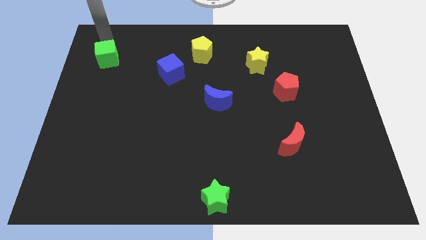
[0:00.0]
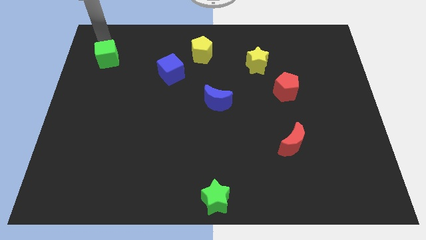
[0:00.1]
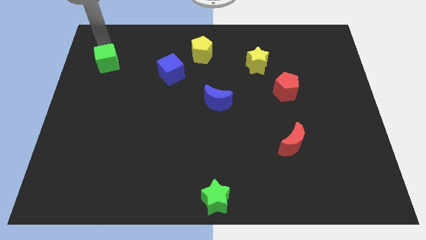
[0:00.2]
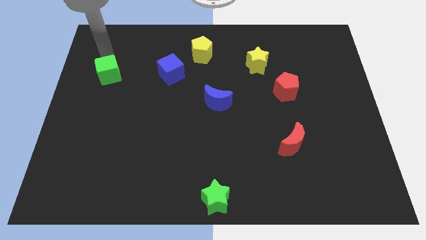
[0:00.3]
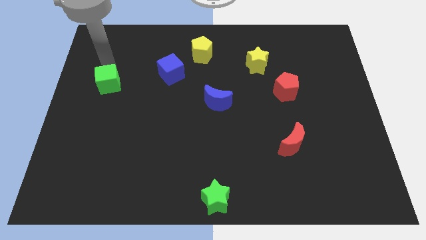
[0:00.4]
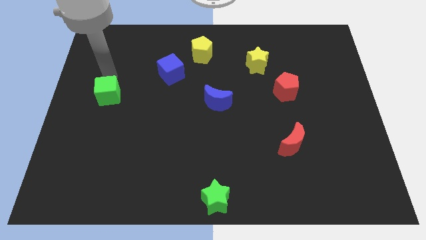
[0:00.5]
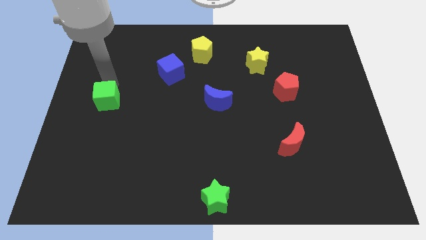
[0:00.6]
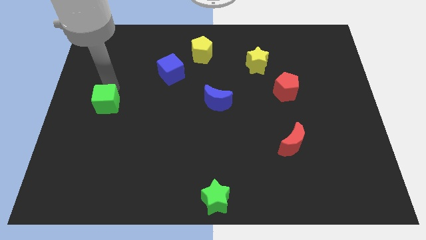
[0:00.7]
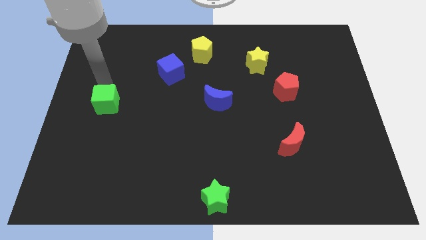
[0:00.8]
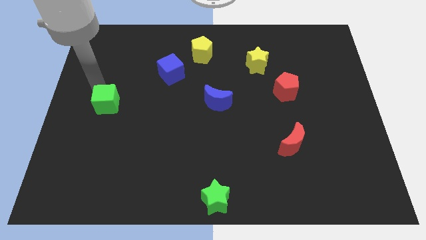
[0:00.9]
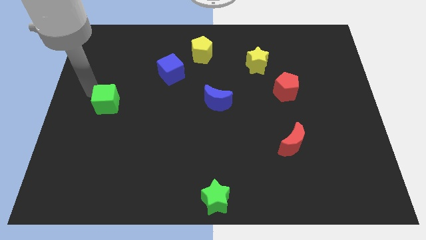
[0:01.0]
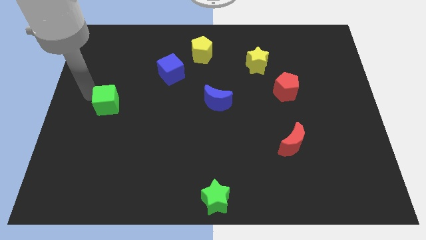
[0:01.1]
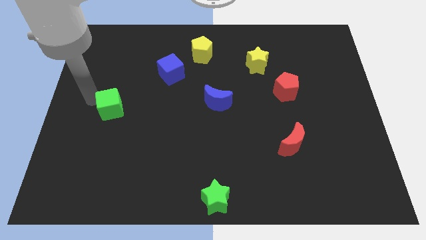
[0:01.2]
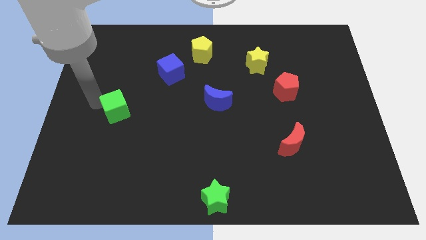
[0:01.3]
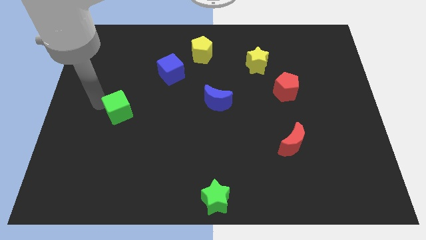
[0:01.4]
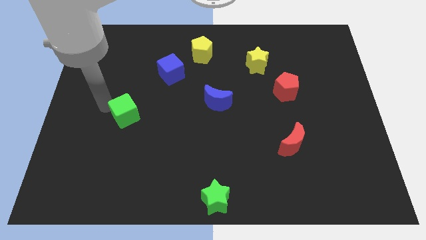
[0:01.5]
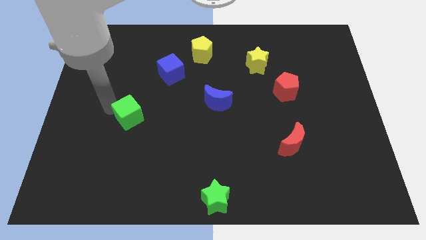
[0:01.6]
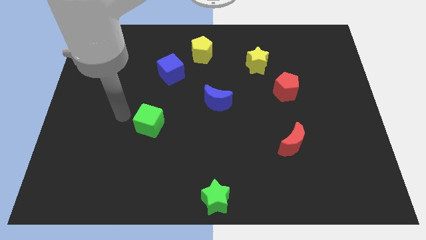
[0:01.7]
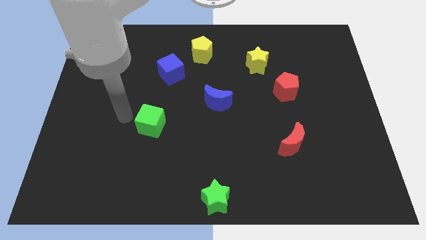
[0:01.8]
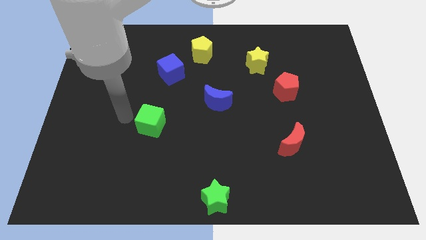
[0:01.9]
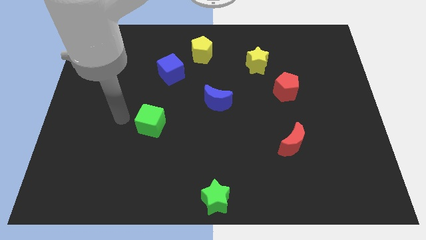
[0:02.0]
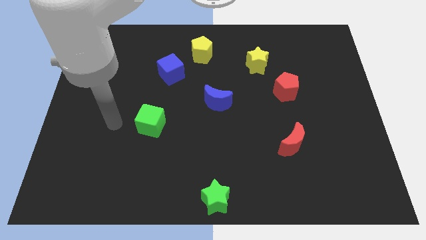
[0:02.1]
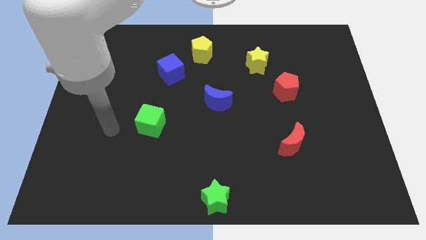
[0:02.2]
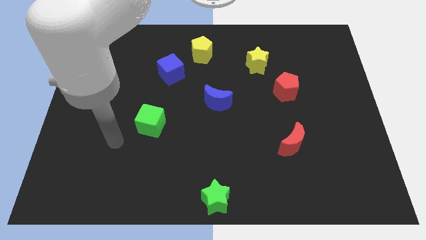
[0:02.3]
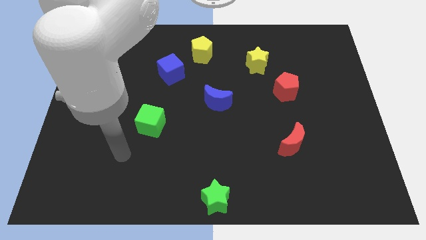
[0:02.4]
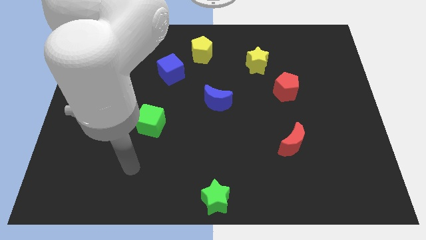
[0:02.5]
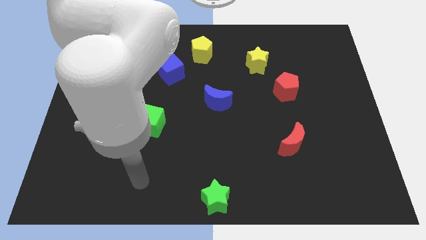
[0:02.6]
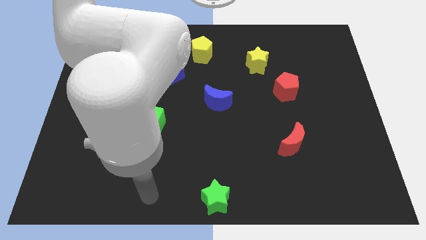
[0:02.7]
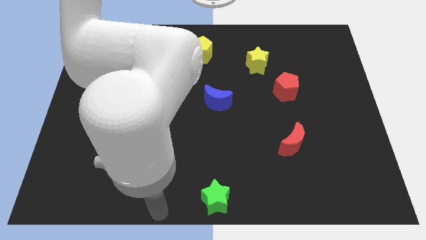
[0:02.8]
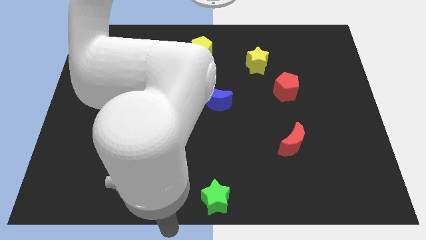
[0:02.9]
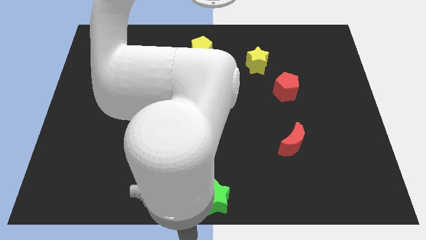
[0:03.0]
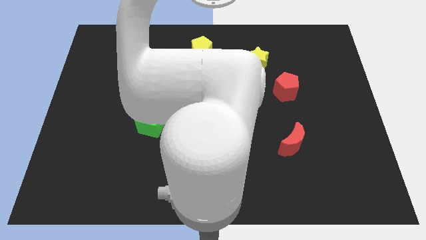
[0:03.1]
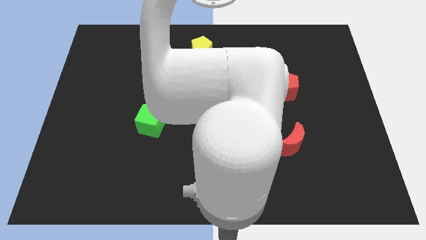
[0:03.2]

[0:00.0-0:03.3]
place the arm to the bottom of the green star

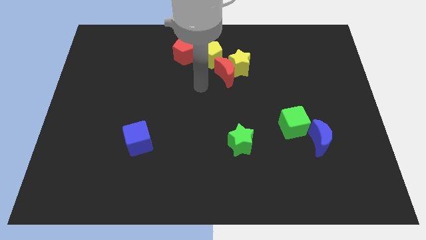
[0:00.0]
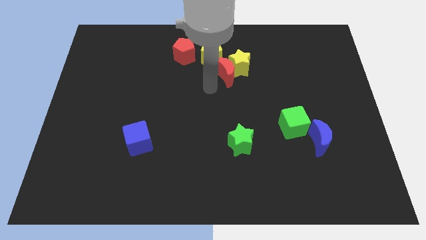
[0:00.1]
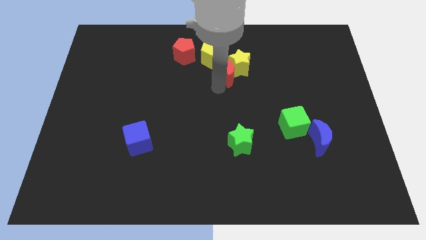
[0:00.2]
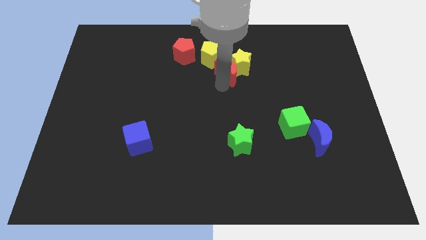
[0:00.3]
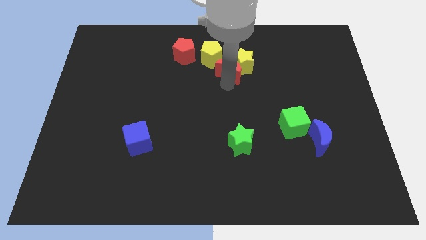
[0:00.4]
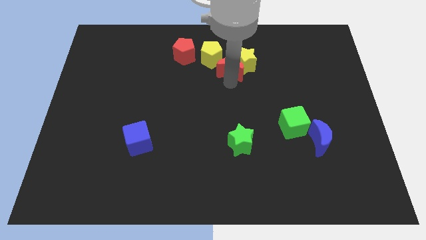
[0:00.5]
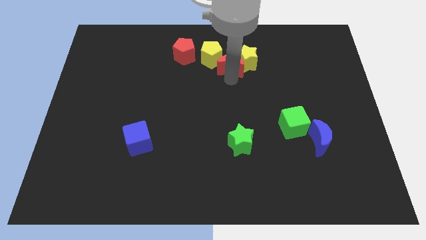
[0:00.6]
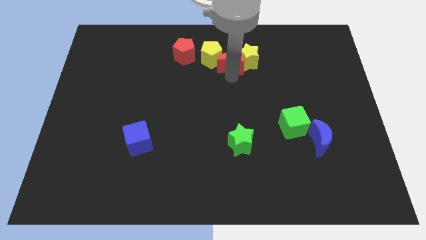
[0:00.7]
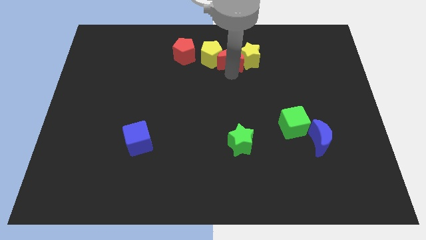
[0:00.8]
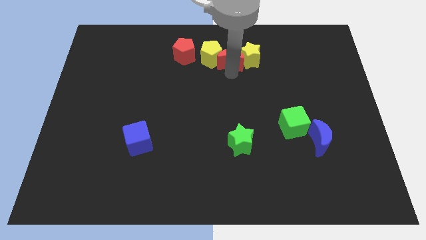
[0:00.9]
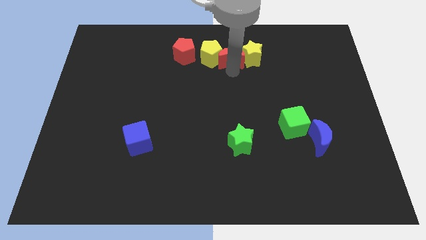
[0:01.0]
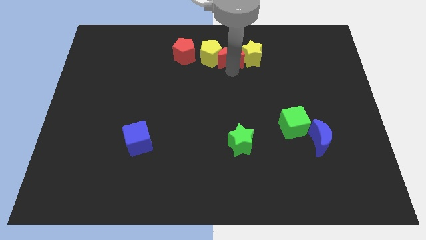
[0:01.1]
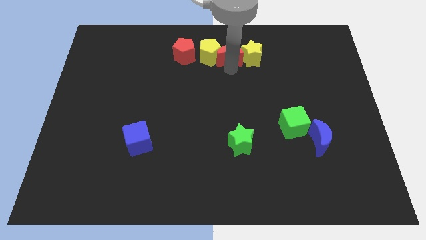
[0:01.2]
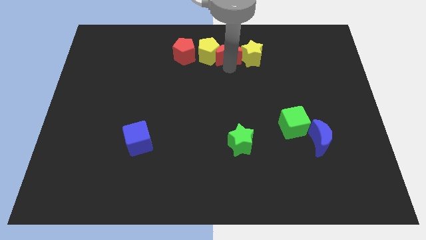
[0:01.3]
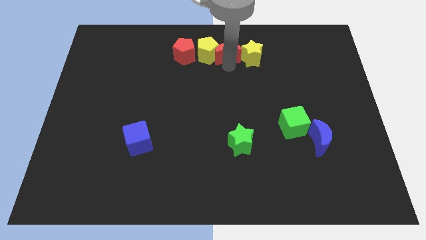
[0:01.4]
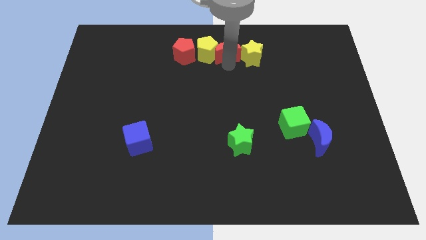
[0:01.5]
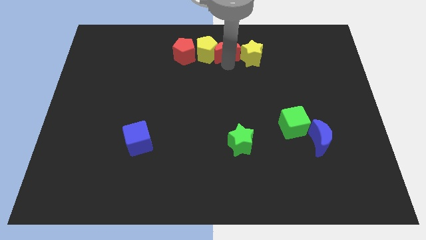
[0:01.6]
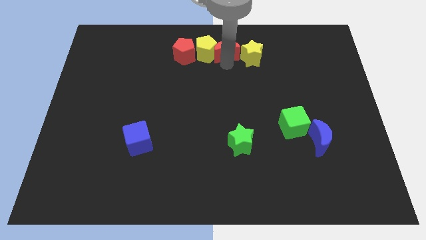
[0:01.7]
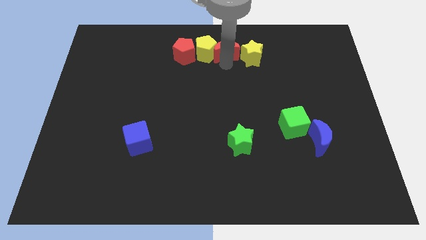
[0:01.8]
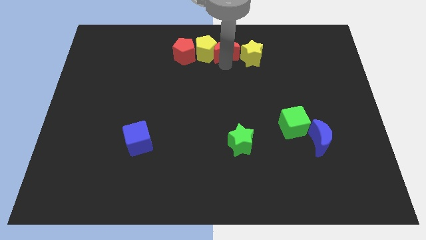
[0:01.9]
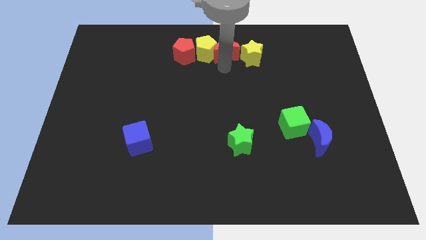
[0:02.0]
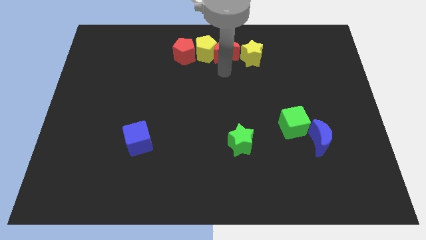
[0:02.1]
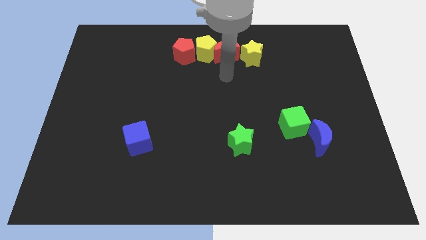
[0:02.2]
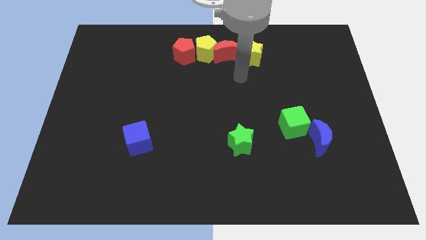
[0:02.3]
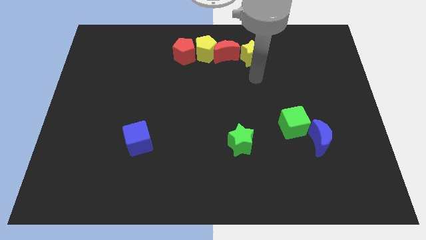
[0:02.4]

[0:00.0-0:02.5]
push red crescent in between yellow pentagon and yellow star

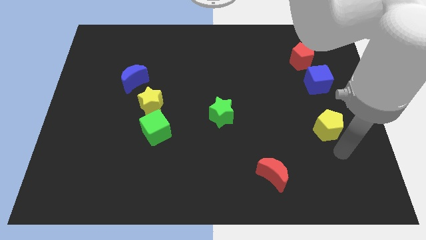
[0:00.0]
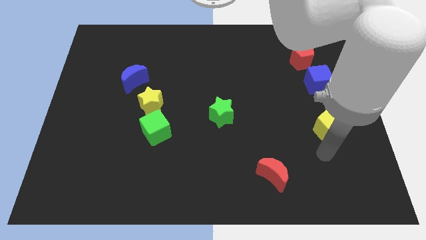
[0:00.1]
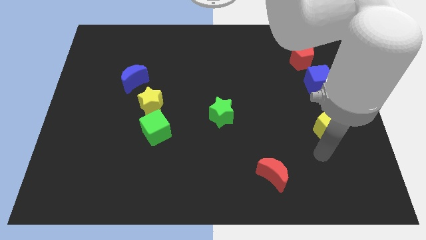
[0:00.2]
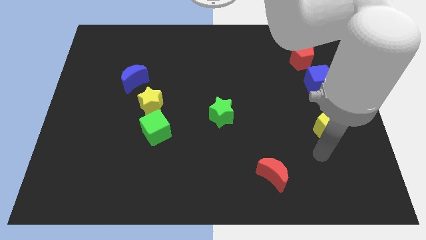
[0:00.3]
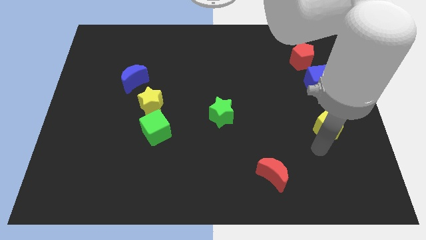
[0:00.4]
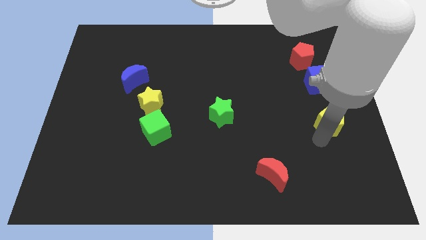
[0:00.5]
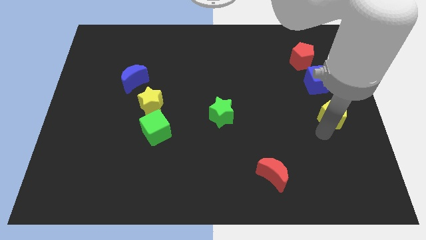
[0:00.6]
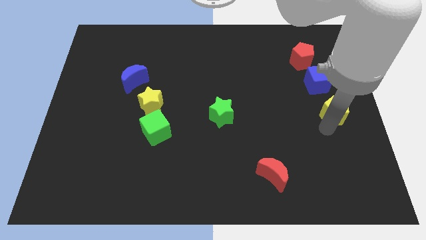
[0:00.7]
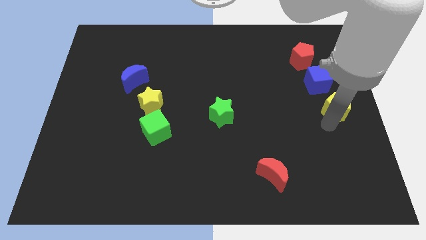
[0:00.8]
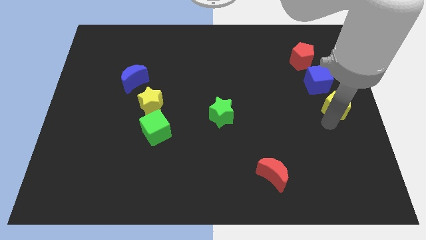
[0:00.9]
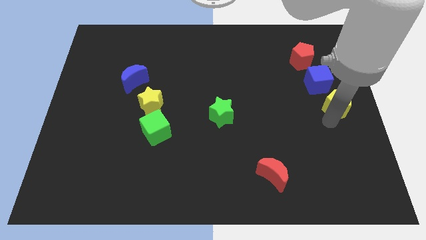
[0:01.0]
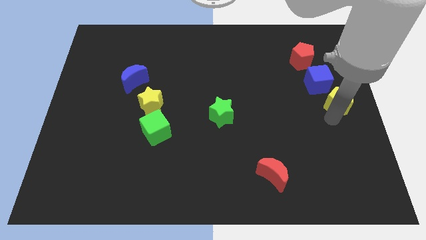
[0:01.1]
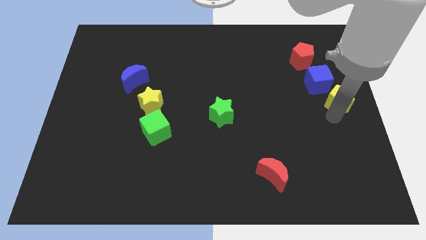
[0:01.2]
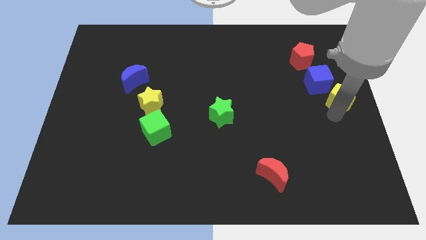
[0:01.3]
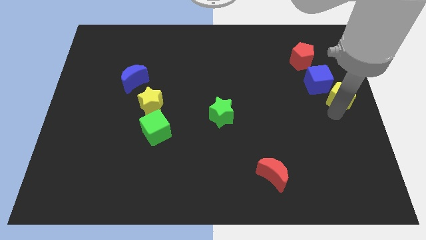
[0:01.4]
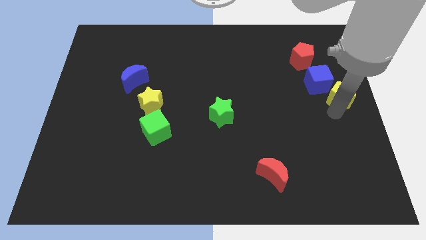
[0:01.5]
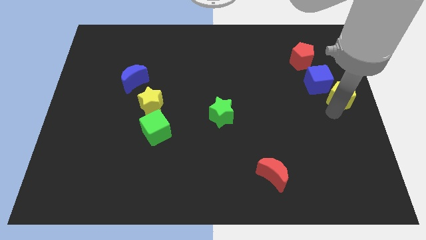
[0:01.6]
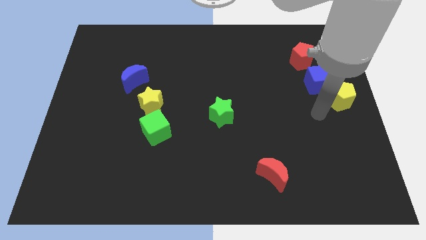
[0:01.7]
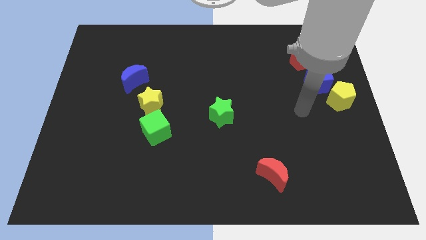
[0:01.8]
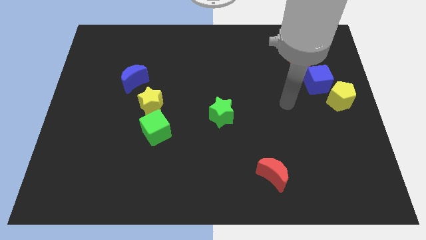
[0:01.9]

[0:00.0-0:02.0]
place the yellow pentagon diagonal below the blue cube

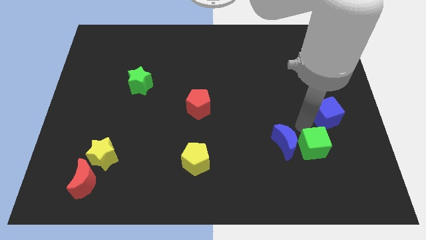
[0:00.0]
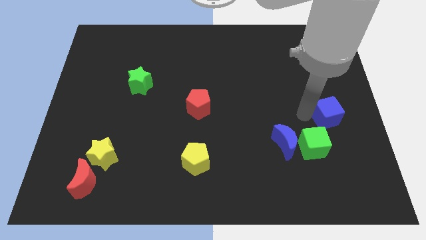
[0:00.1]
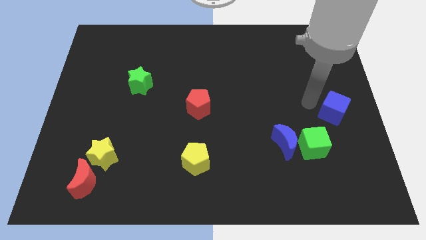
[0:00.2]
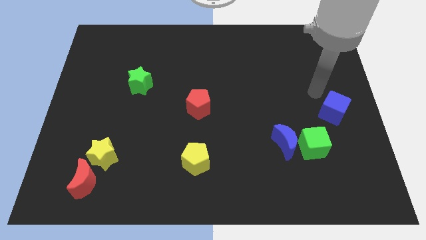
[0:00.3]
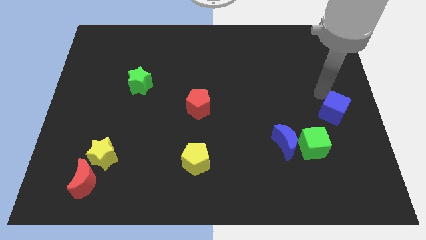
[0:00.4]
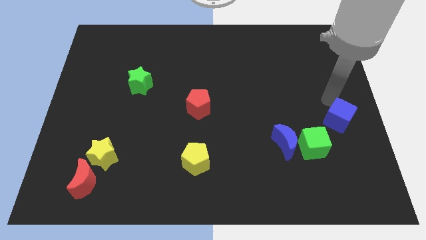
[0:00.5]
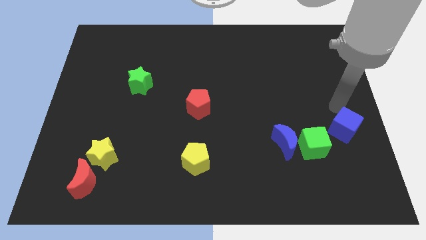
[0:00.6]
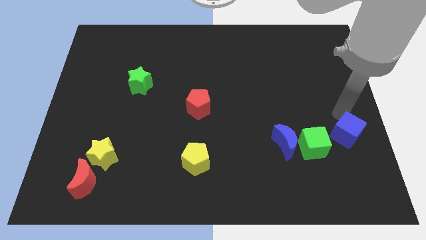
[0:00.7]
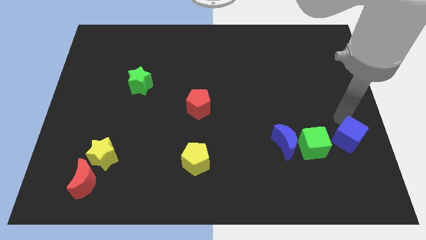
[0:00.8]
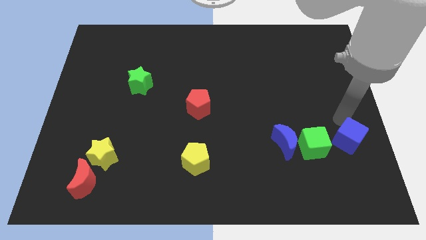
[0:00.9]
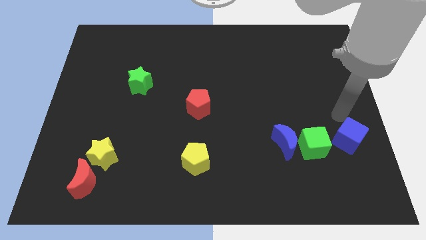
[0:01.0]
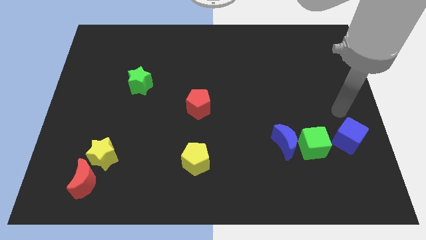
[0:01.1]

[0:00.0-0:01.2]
place the blue cube right to the green cube
